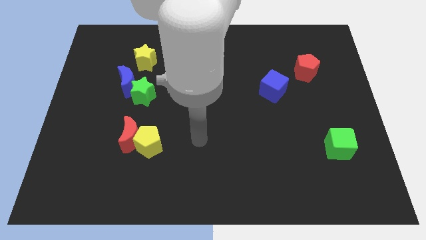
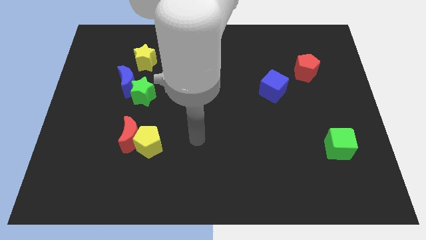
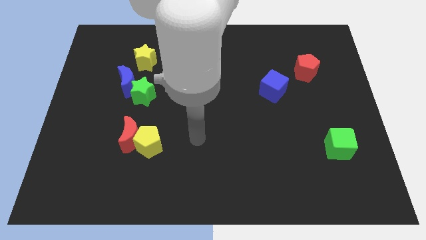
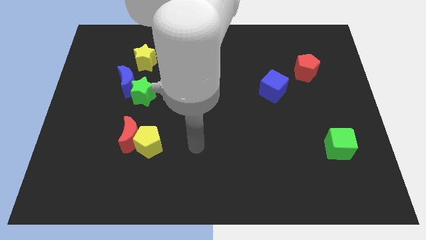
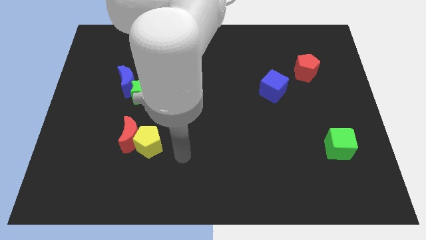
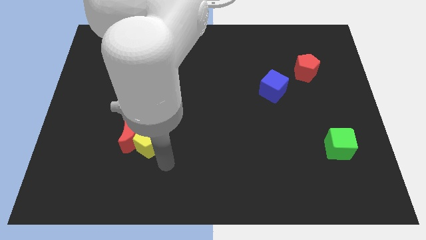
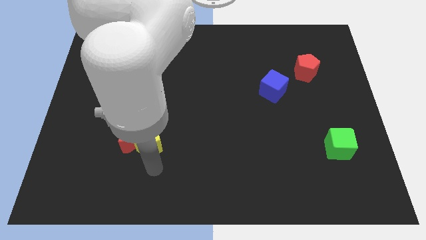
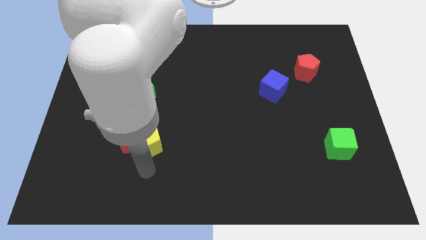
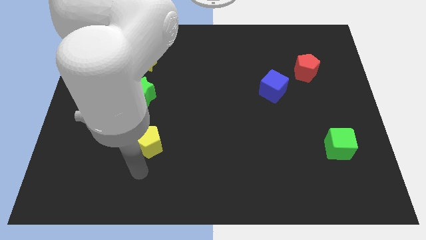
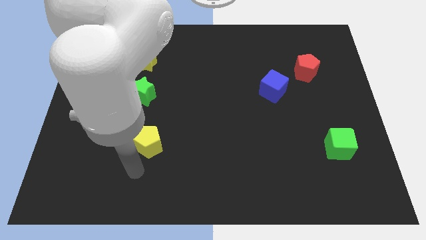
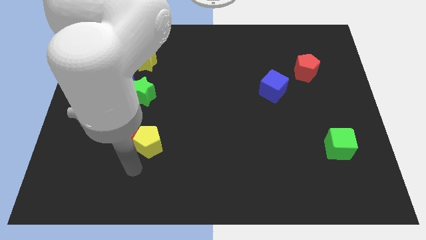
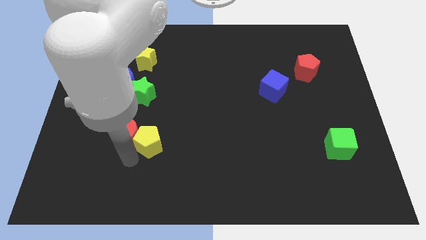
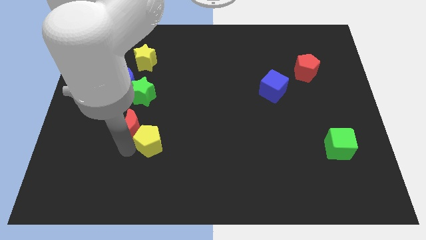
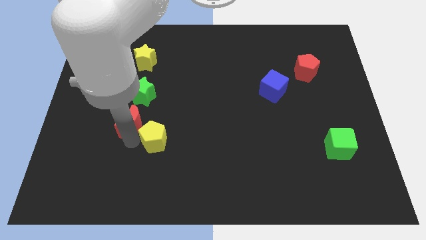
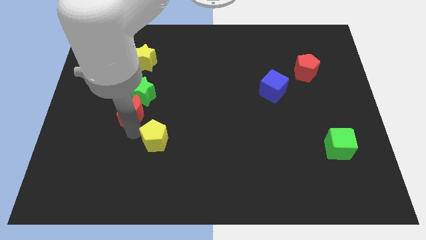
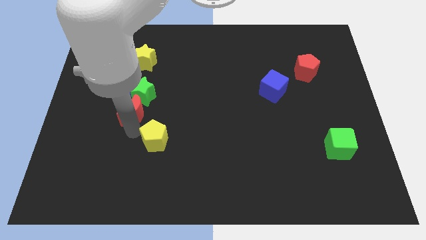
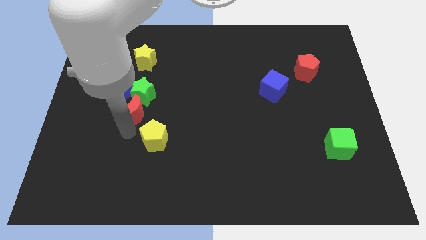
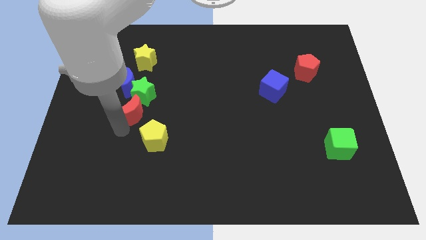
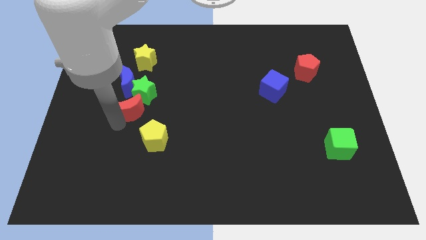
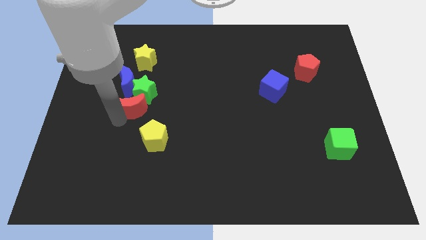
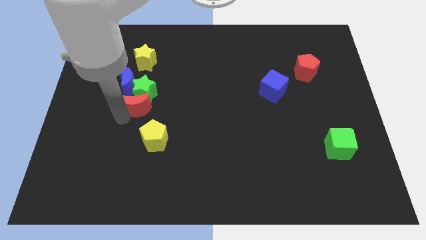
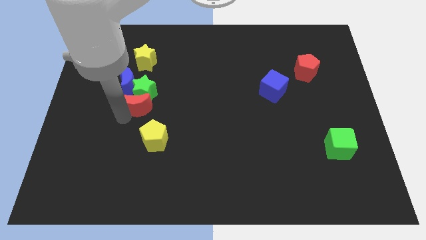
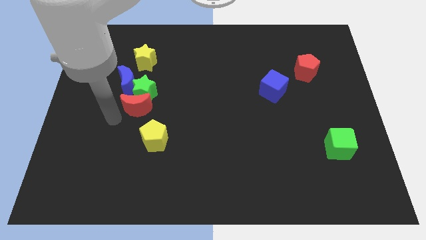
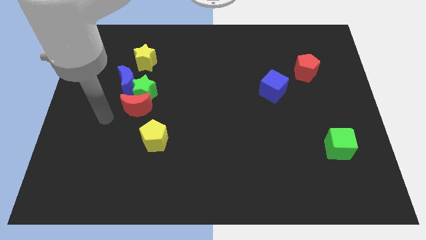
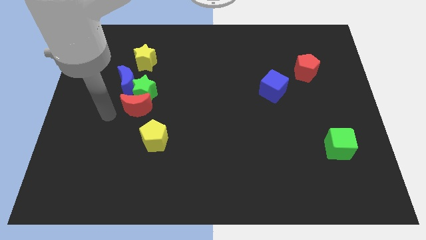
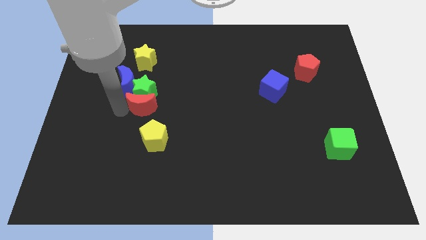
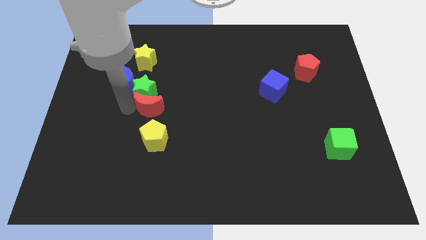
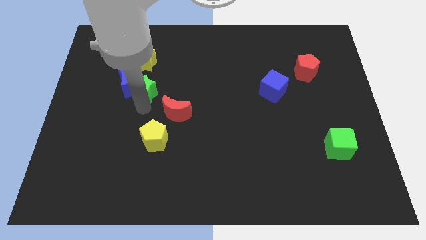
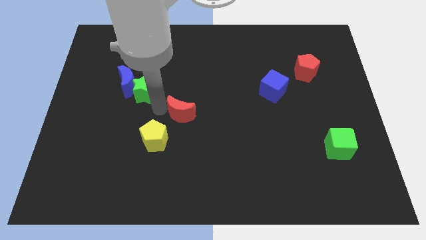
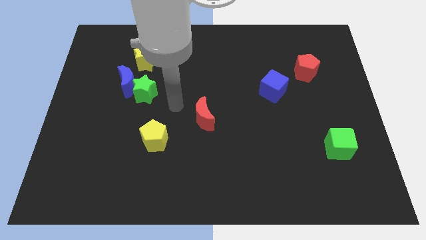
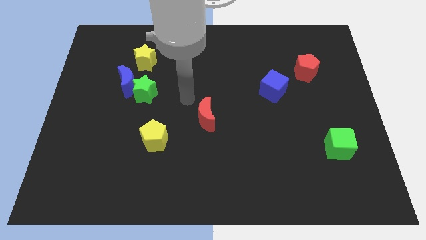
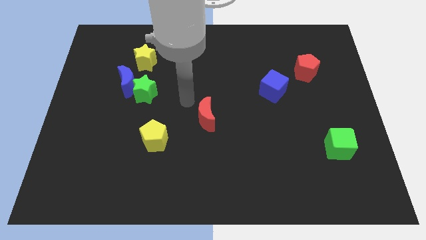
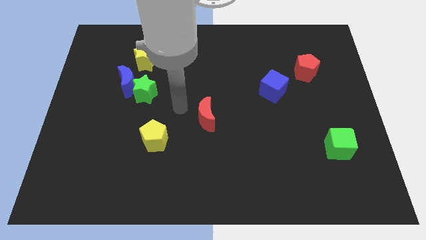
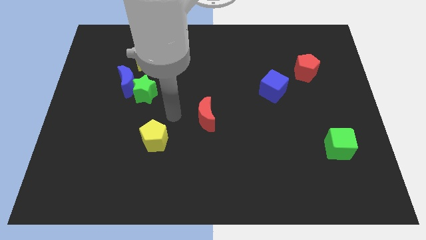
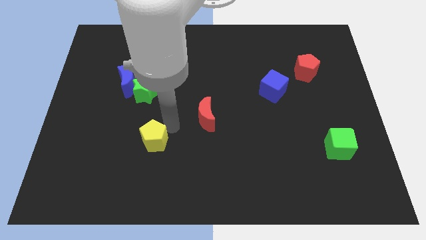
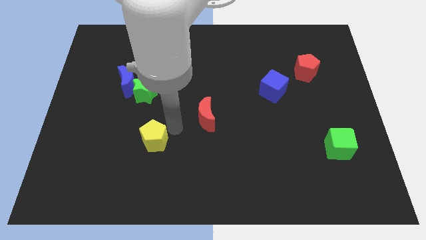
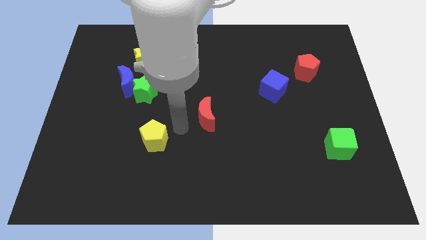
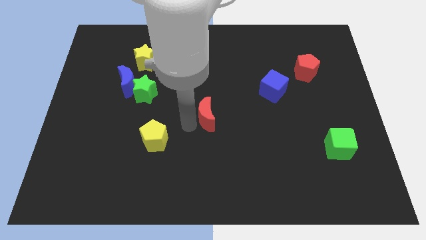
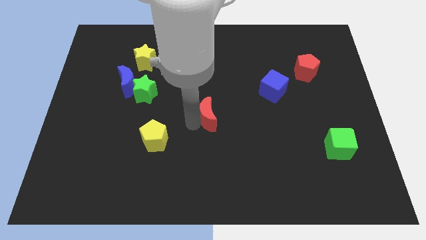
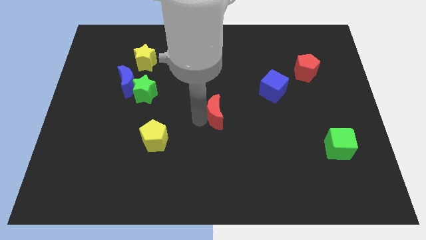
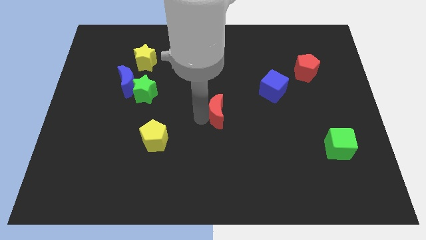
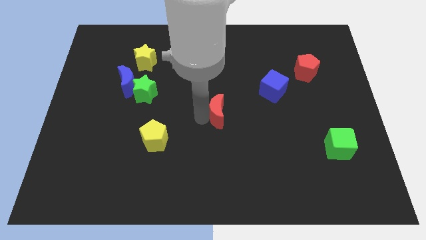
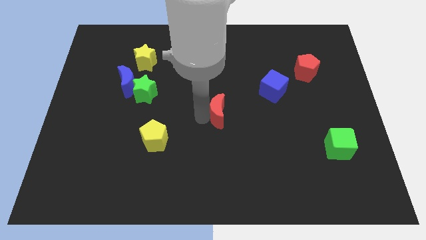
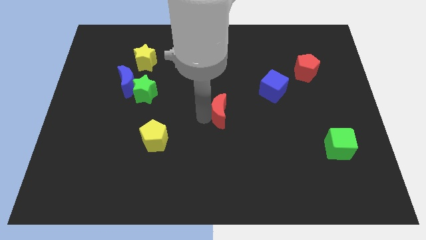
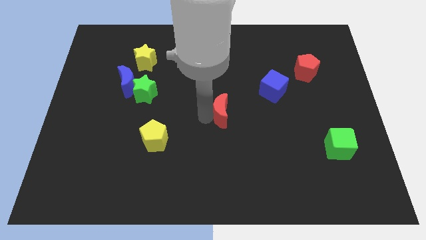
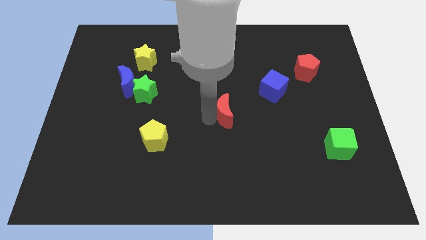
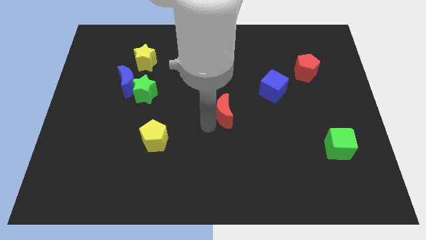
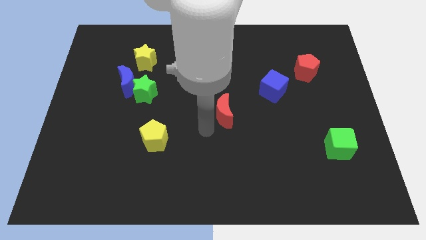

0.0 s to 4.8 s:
push the red crescent to the center of the board

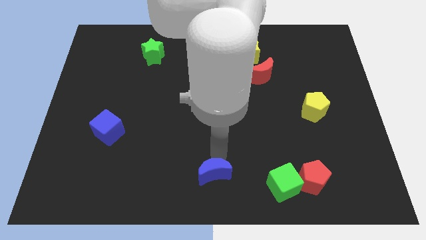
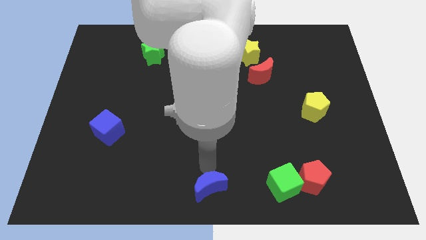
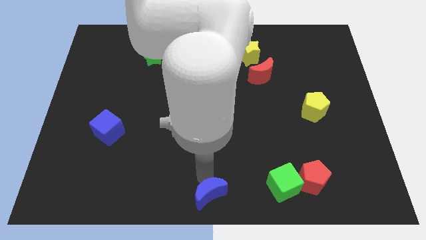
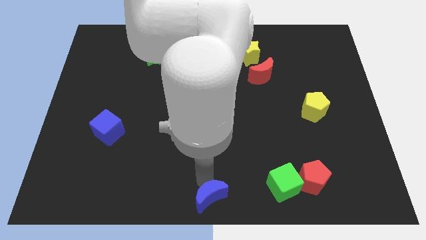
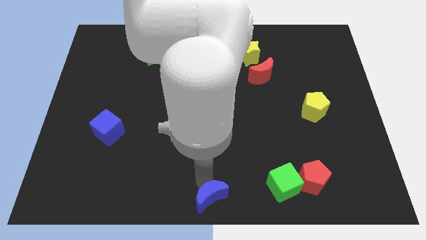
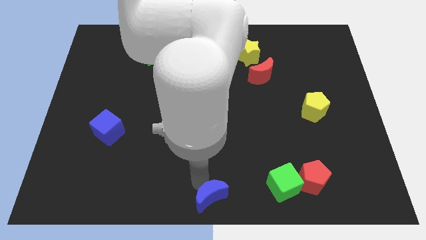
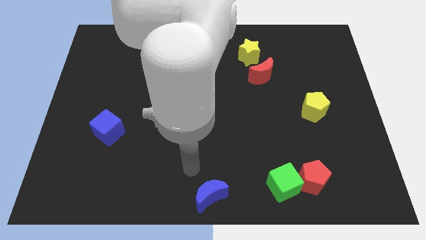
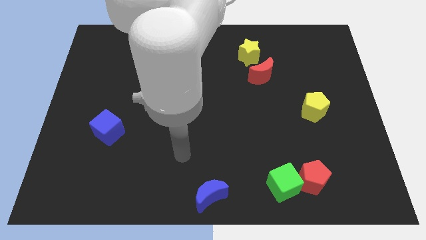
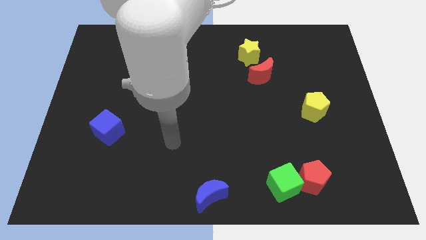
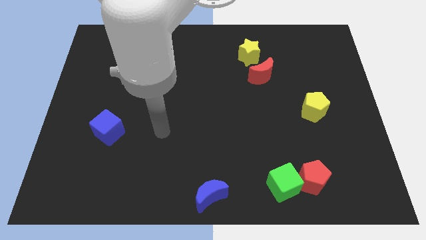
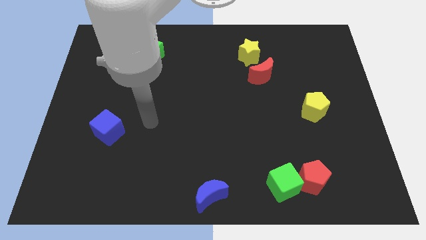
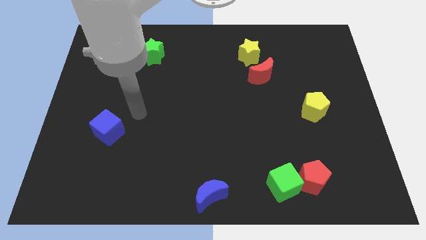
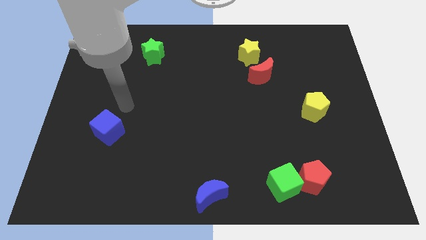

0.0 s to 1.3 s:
move the blue crescent to the bottom center of the board

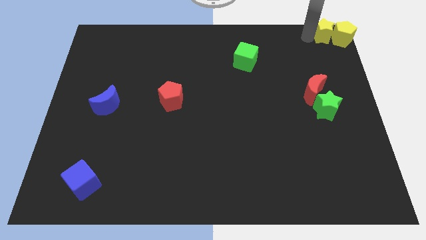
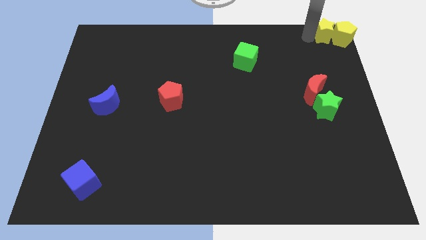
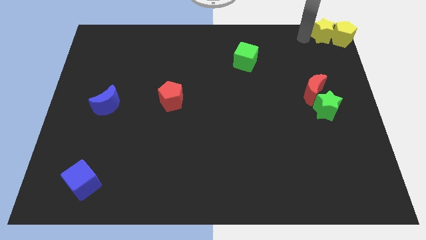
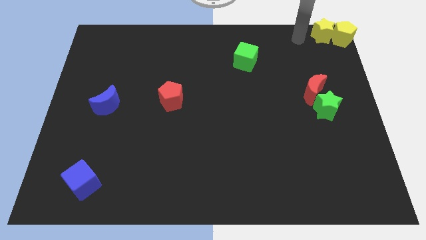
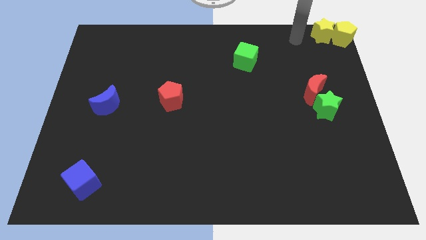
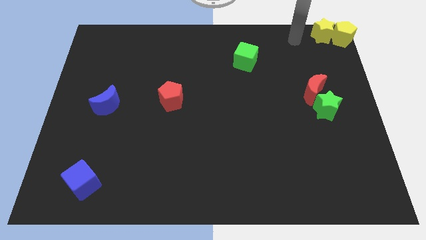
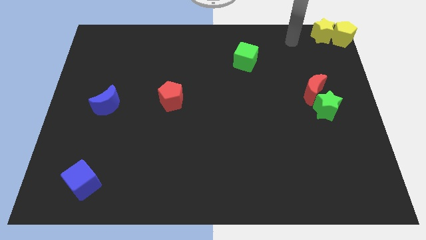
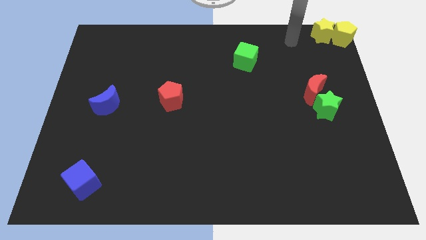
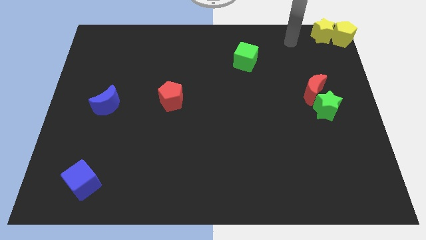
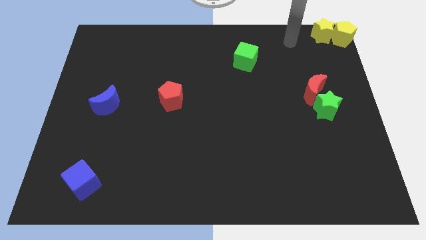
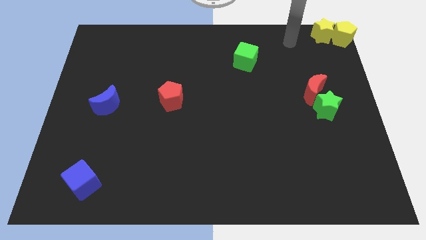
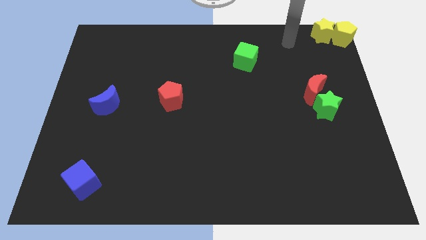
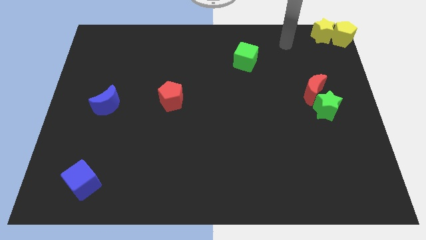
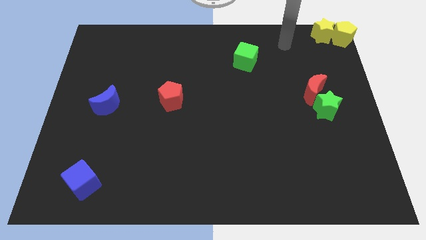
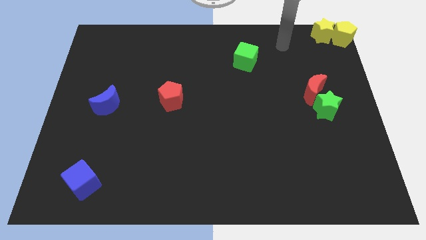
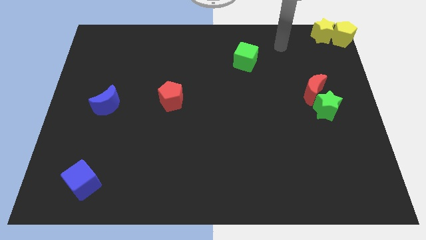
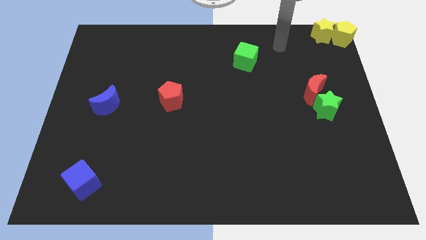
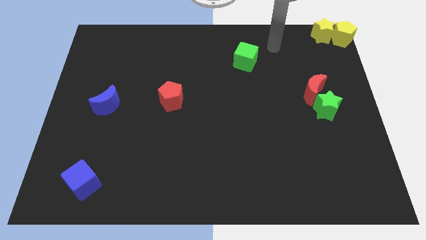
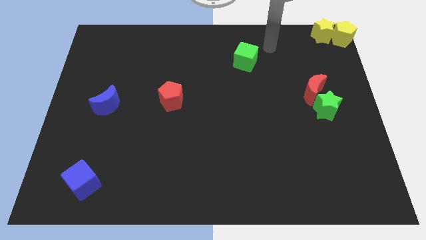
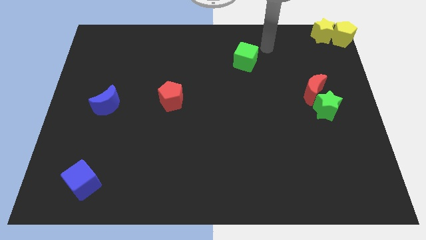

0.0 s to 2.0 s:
move the arm towards the green cube

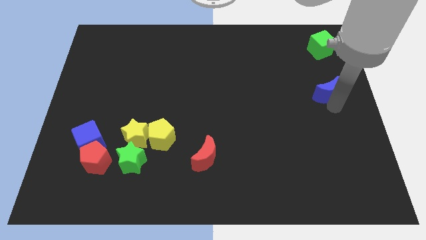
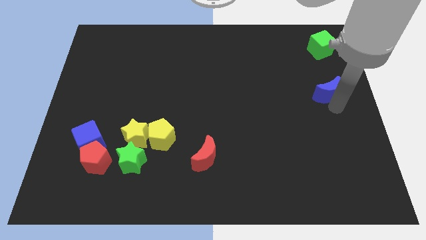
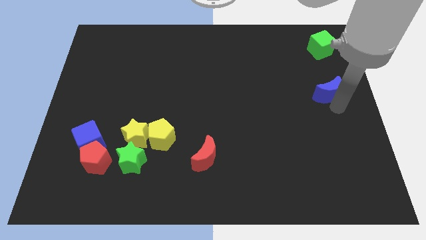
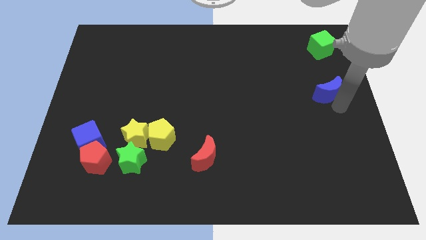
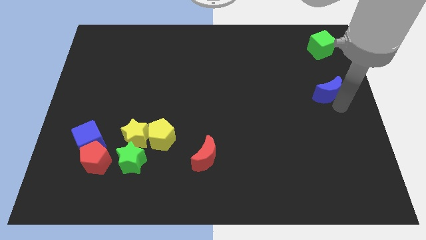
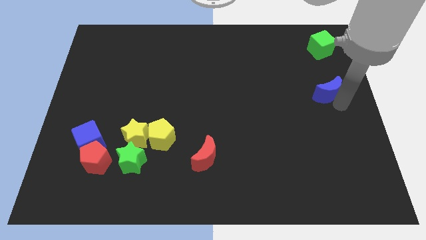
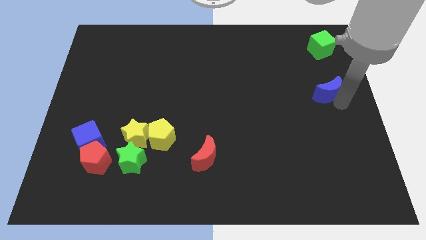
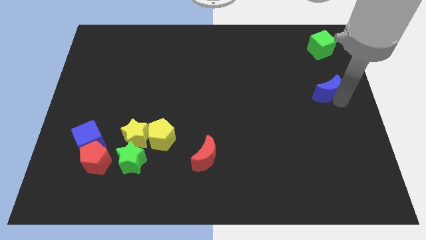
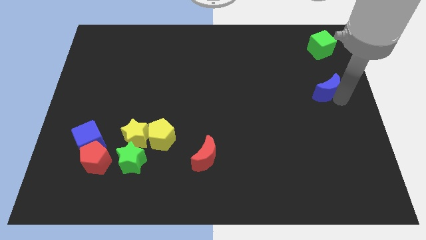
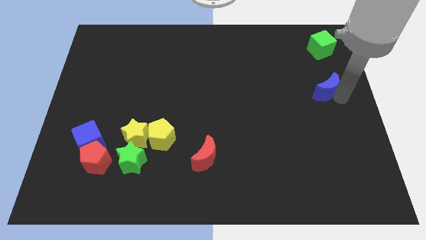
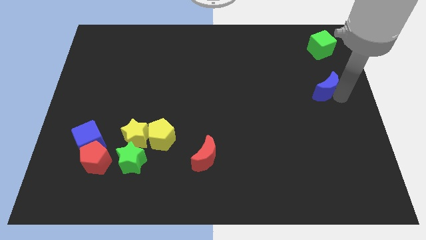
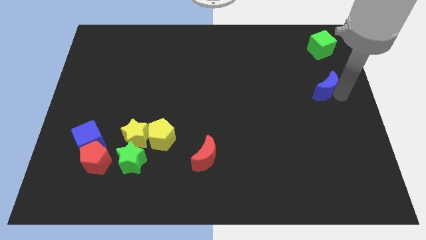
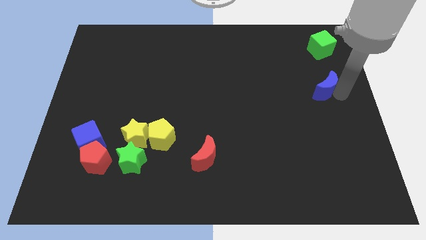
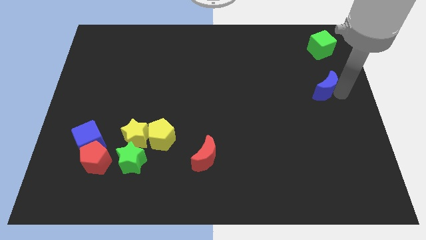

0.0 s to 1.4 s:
place the blue crescent below the green cube
